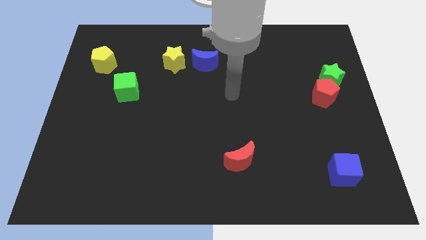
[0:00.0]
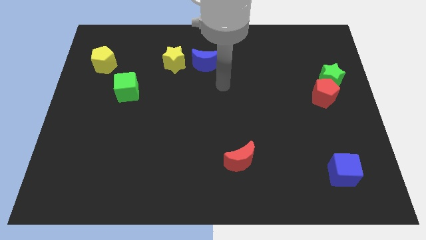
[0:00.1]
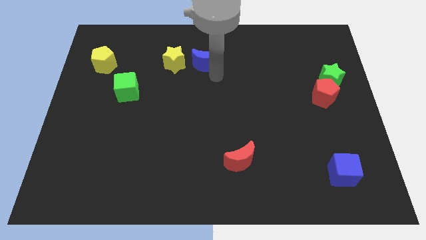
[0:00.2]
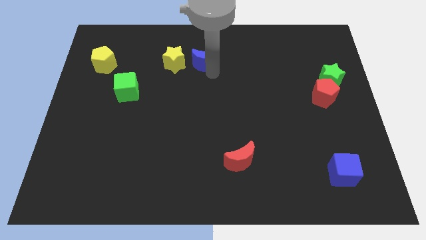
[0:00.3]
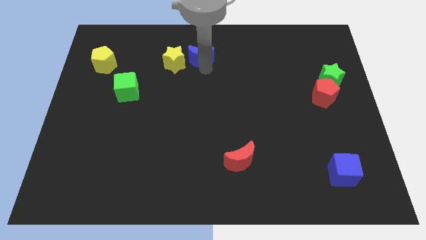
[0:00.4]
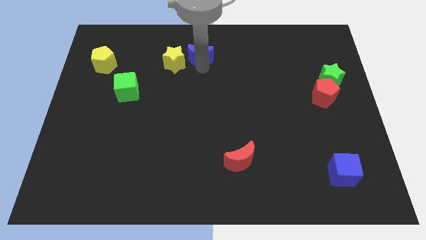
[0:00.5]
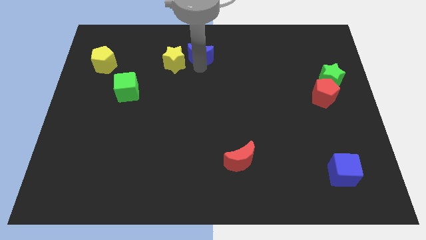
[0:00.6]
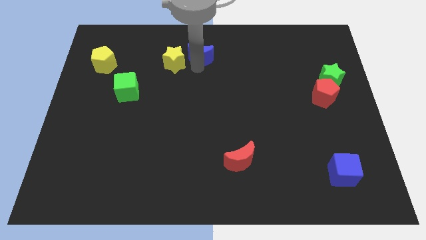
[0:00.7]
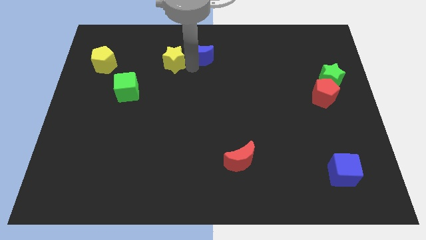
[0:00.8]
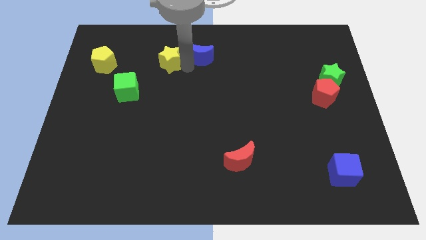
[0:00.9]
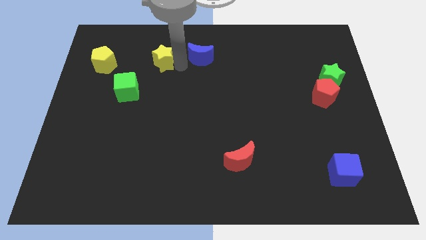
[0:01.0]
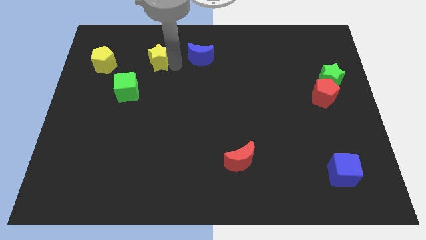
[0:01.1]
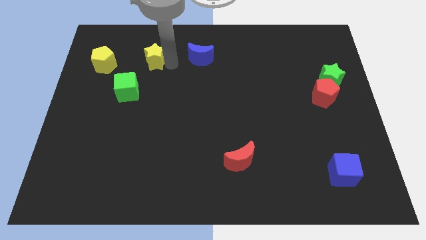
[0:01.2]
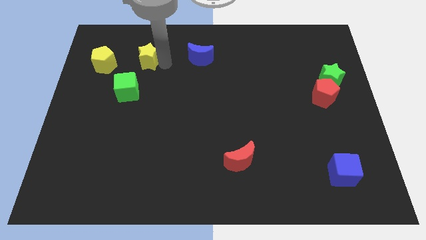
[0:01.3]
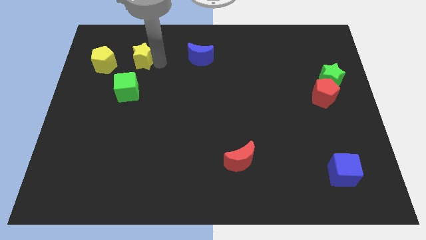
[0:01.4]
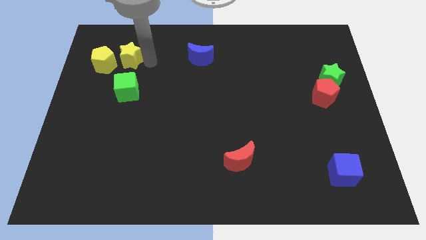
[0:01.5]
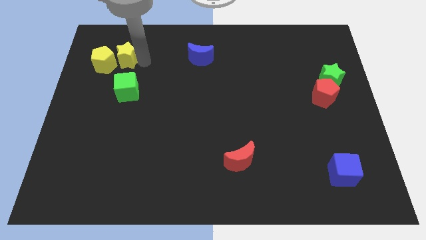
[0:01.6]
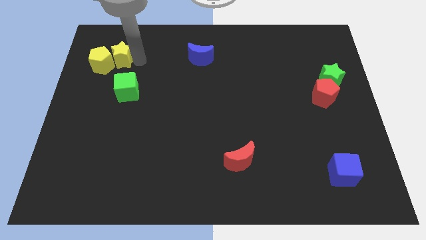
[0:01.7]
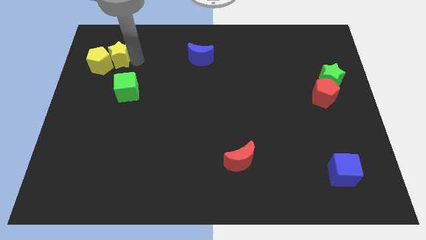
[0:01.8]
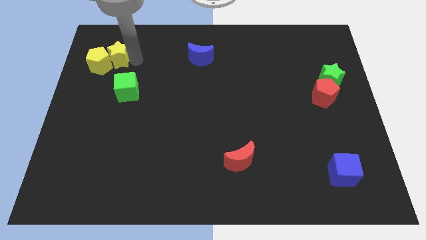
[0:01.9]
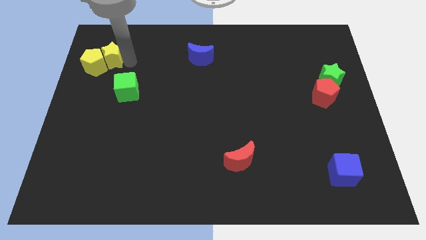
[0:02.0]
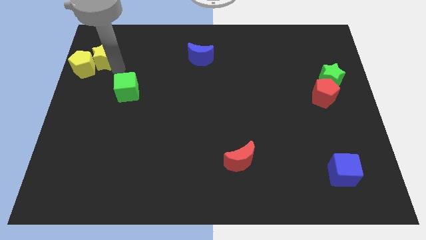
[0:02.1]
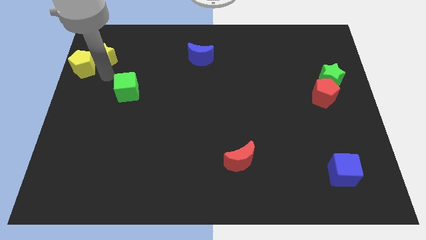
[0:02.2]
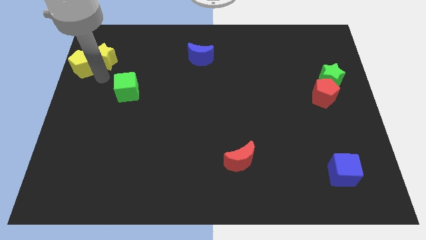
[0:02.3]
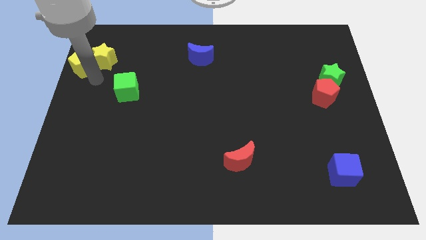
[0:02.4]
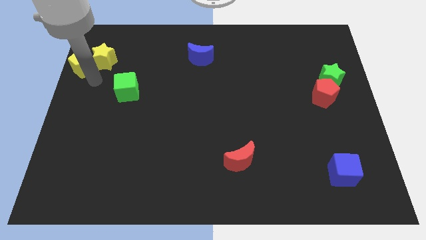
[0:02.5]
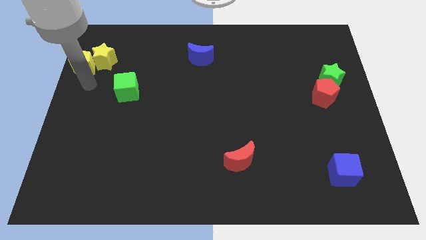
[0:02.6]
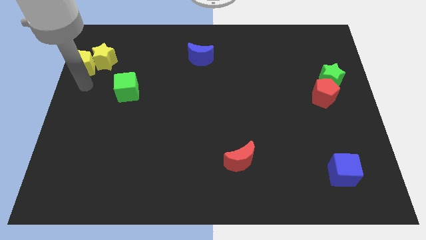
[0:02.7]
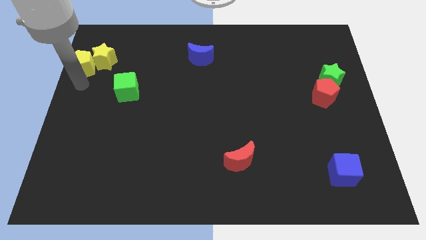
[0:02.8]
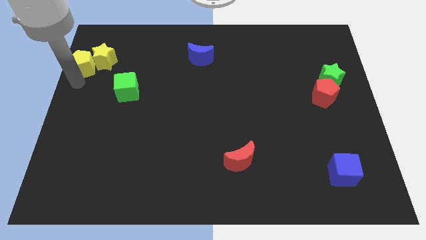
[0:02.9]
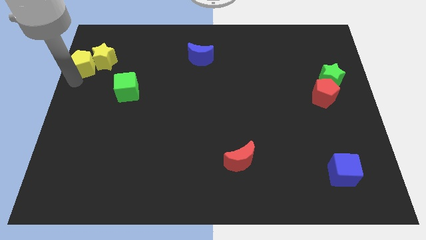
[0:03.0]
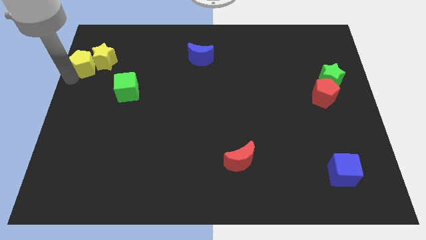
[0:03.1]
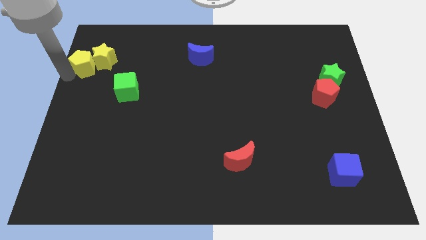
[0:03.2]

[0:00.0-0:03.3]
push yellow star near yellow pentagon

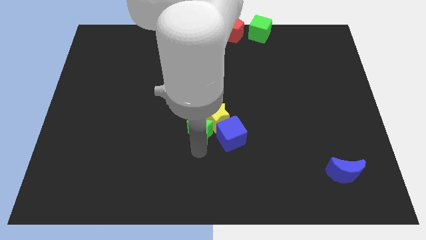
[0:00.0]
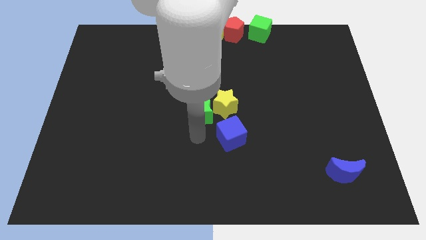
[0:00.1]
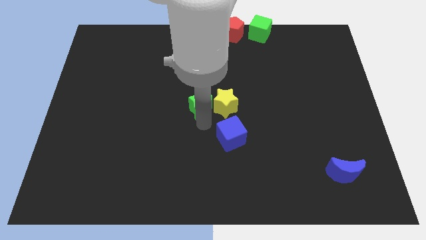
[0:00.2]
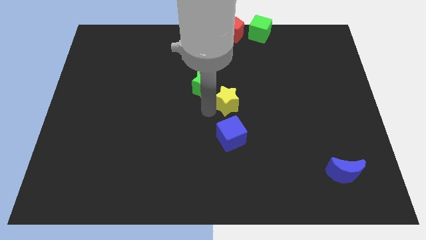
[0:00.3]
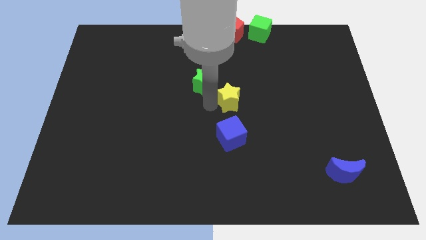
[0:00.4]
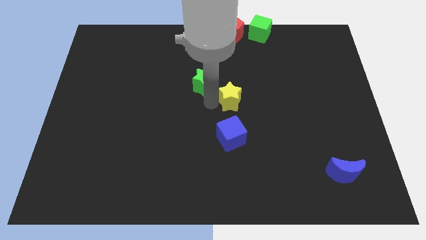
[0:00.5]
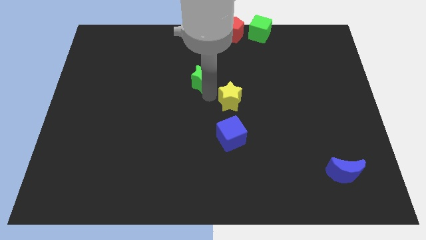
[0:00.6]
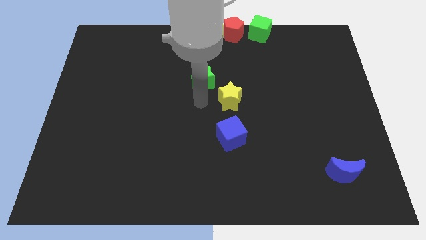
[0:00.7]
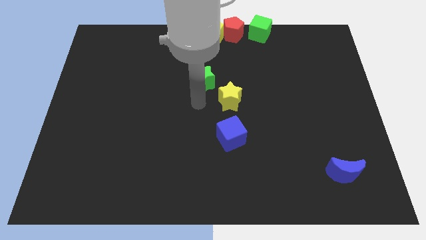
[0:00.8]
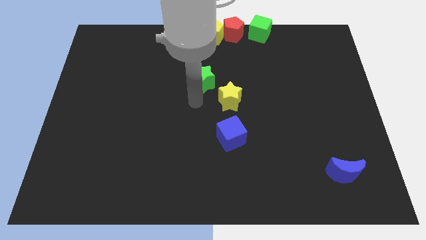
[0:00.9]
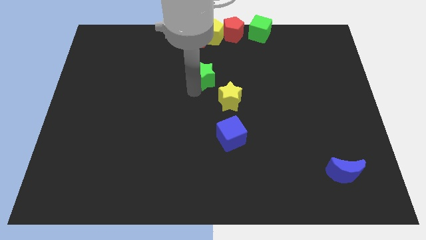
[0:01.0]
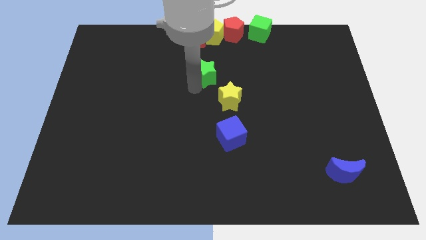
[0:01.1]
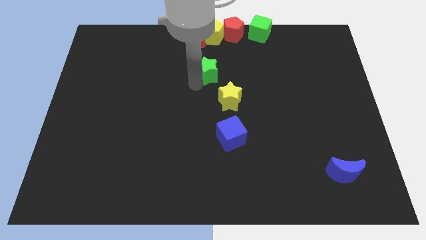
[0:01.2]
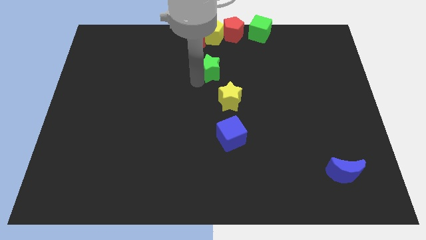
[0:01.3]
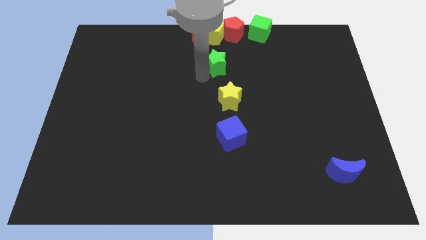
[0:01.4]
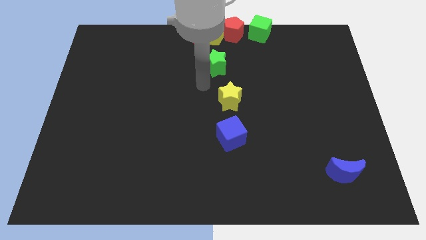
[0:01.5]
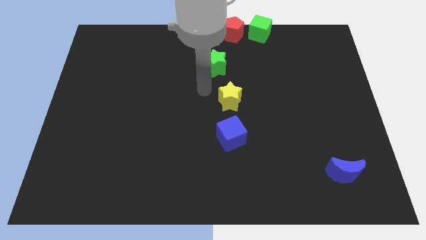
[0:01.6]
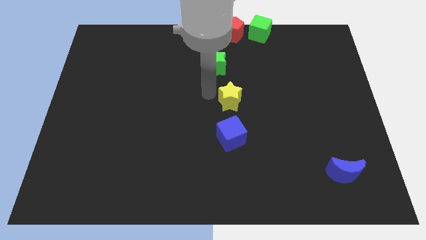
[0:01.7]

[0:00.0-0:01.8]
separate the green star from the yellow star

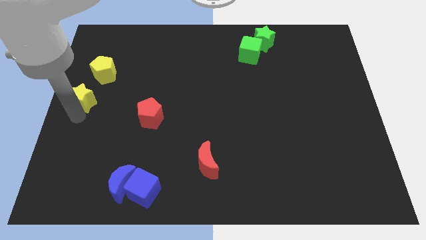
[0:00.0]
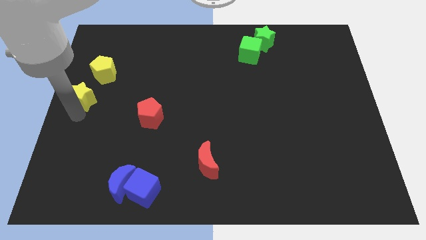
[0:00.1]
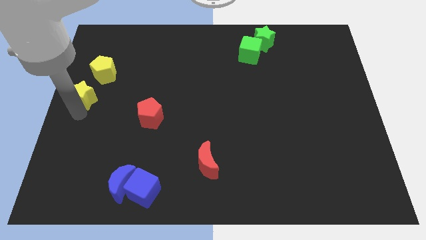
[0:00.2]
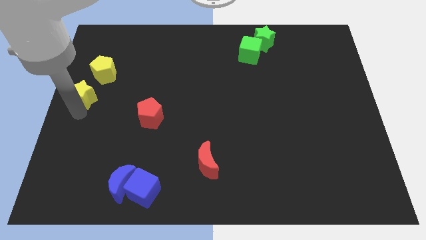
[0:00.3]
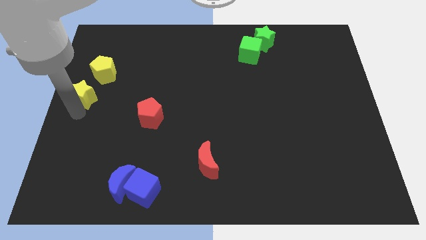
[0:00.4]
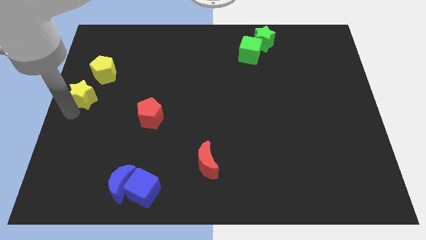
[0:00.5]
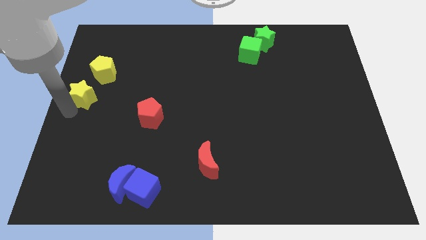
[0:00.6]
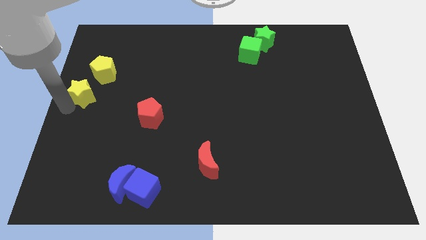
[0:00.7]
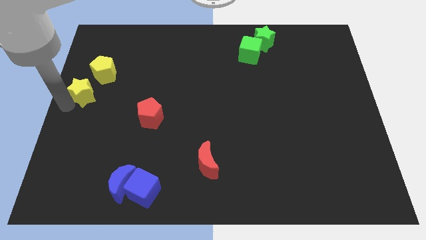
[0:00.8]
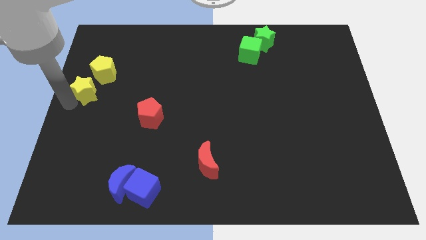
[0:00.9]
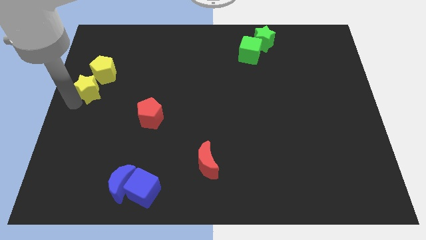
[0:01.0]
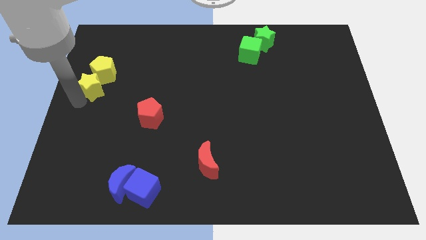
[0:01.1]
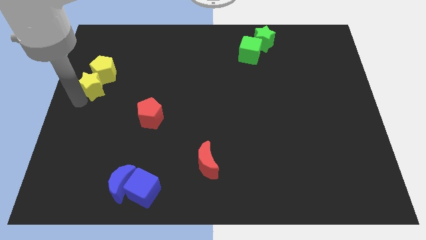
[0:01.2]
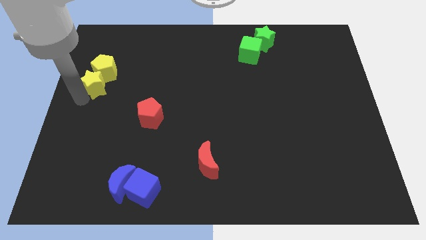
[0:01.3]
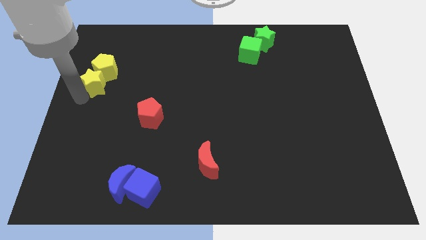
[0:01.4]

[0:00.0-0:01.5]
push the yellow star below the yellow pentagon

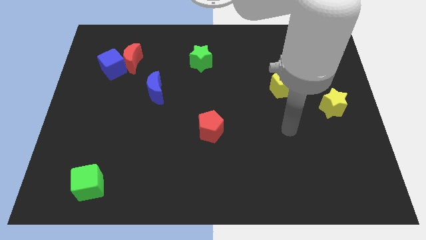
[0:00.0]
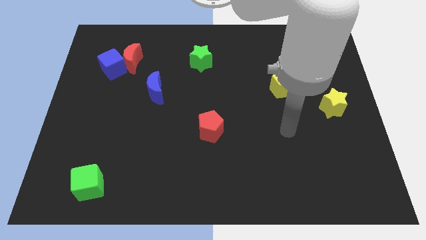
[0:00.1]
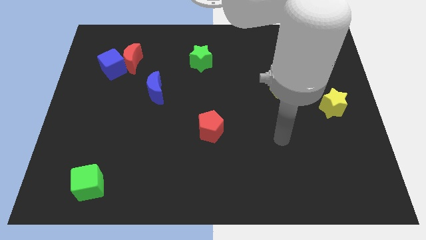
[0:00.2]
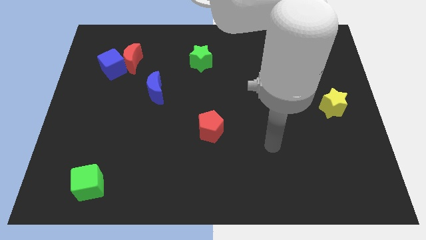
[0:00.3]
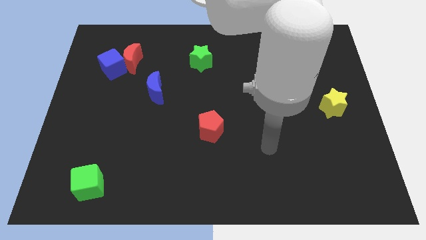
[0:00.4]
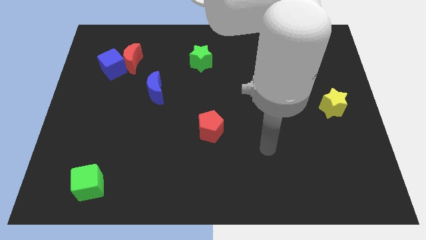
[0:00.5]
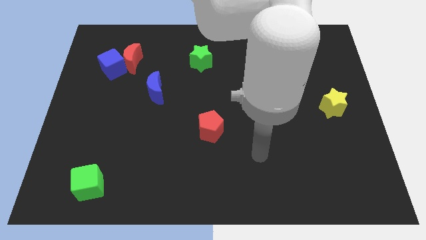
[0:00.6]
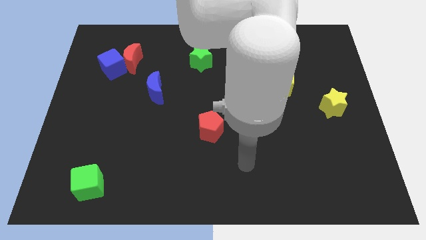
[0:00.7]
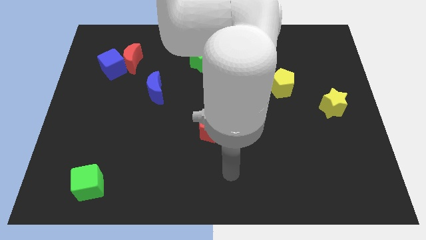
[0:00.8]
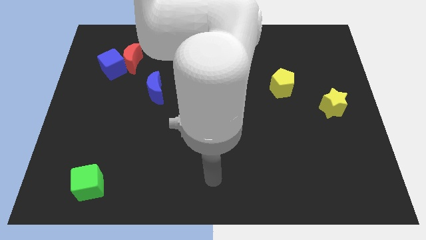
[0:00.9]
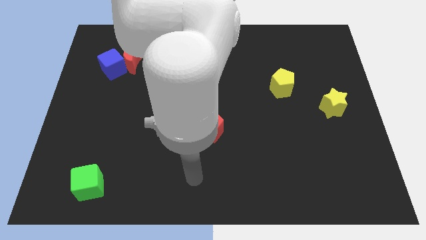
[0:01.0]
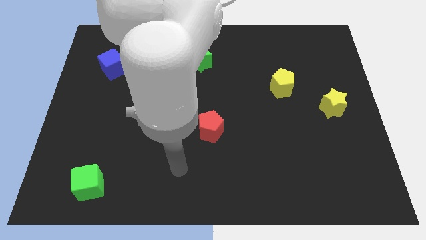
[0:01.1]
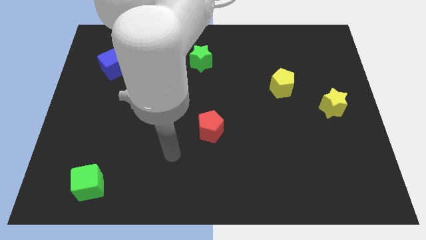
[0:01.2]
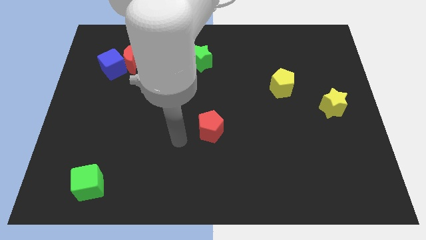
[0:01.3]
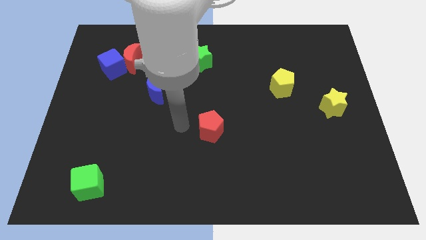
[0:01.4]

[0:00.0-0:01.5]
point your arm at the left side of the red pentagon

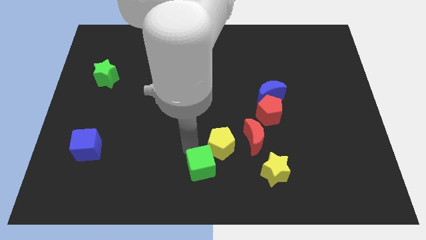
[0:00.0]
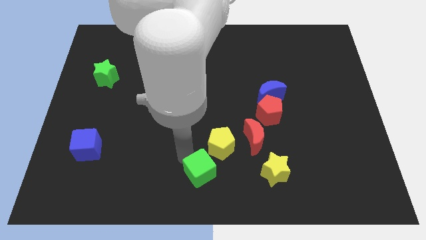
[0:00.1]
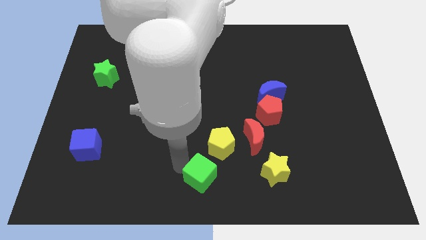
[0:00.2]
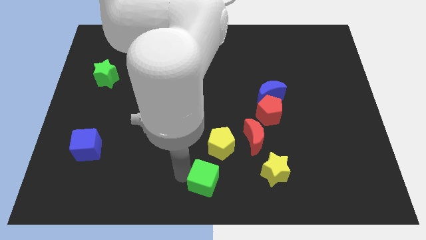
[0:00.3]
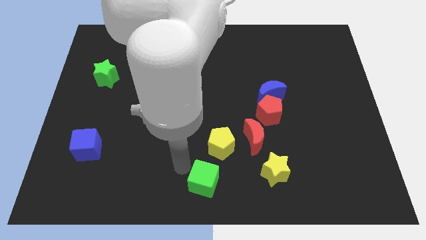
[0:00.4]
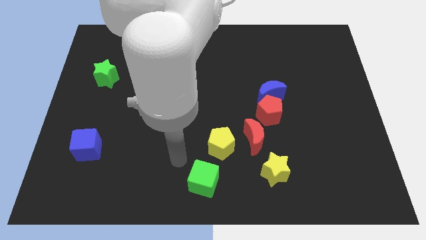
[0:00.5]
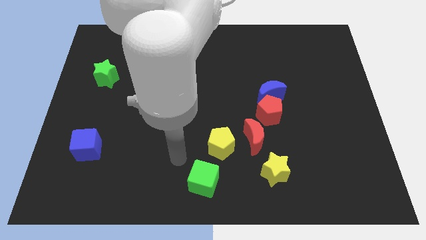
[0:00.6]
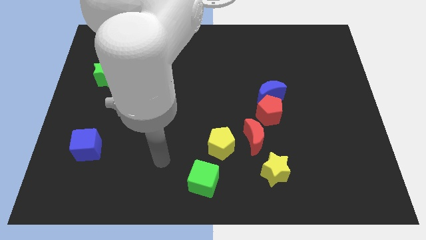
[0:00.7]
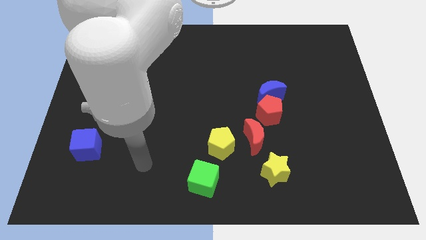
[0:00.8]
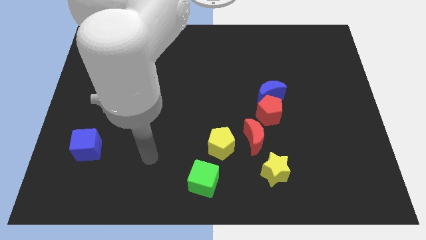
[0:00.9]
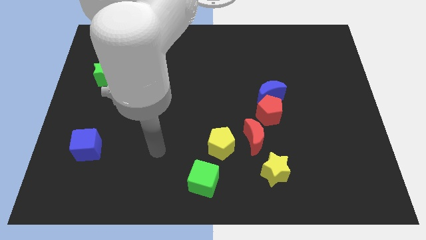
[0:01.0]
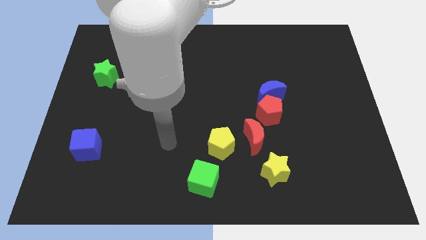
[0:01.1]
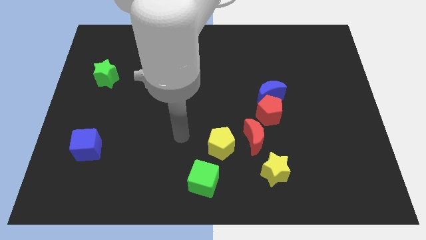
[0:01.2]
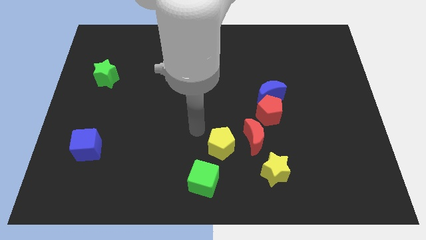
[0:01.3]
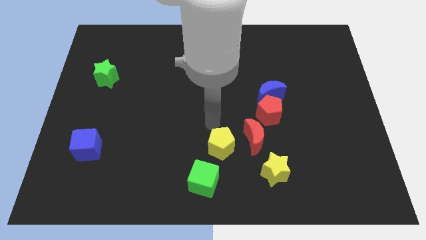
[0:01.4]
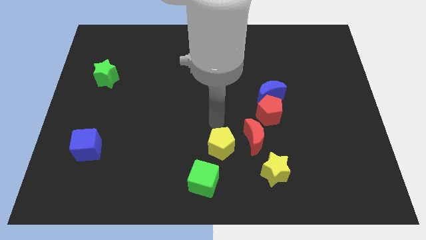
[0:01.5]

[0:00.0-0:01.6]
place the green cube at the bottom center of the board
